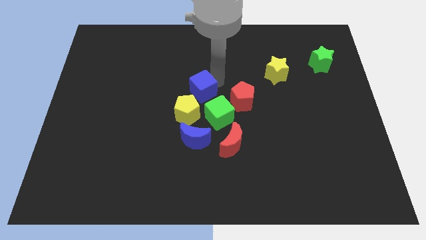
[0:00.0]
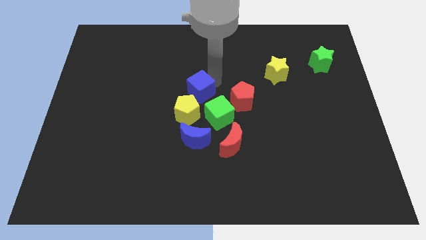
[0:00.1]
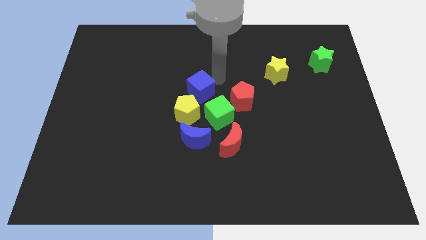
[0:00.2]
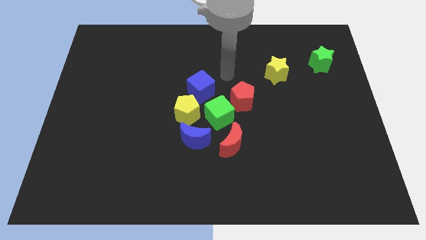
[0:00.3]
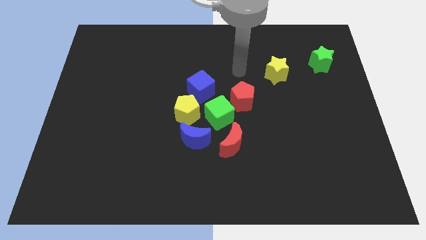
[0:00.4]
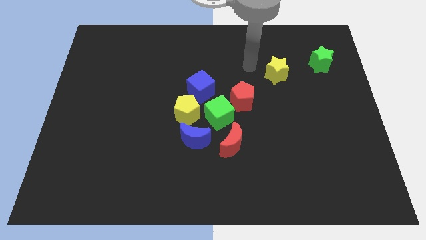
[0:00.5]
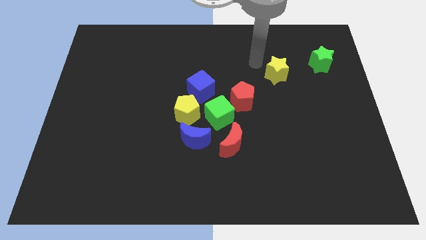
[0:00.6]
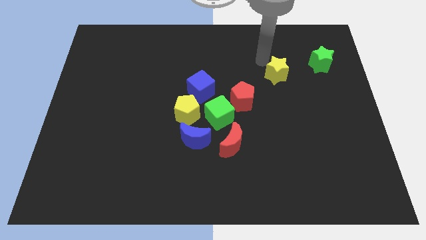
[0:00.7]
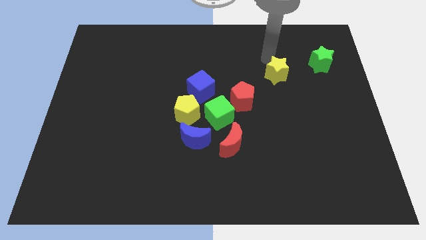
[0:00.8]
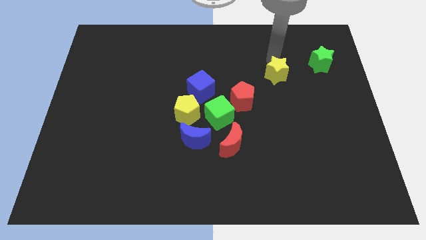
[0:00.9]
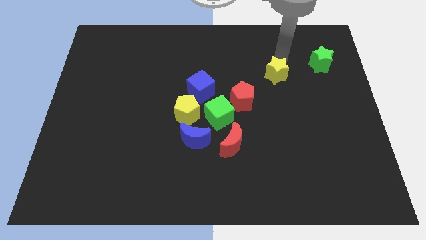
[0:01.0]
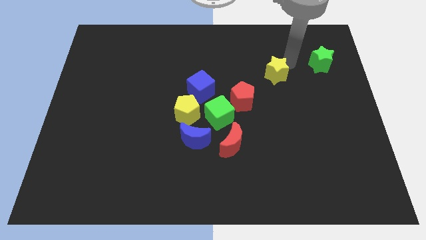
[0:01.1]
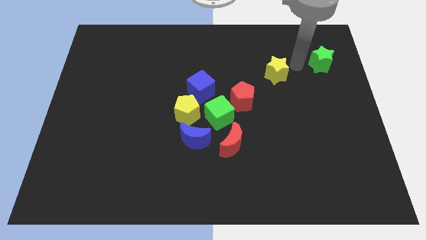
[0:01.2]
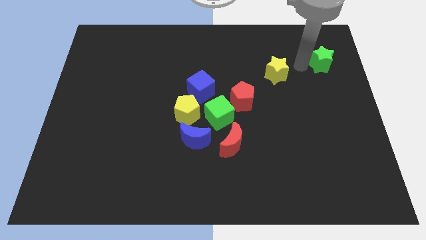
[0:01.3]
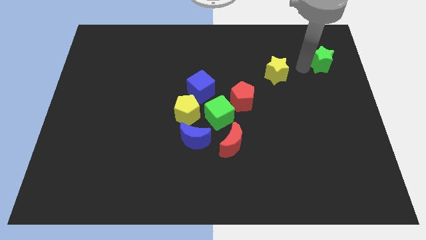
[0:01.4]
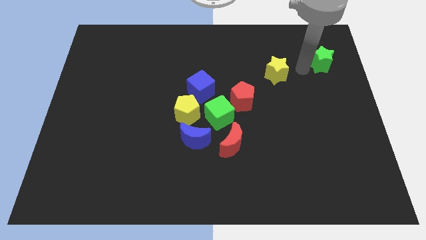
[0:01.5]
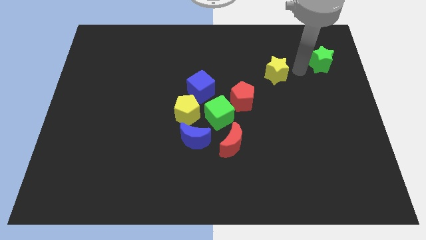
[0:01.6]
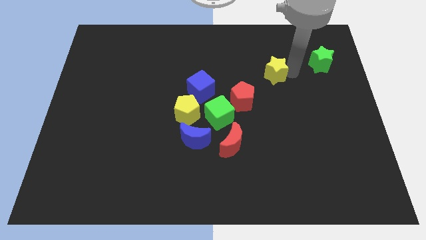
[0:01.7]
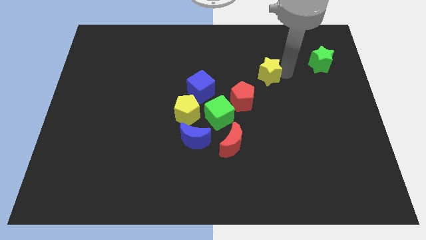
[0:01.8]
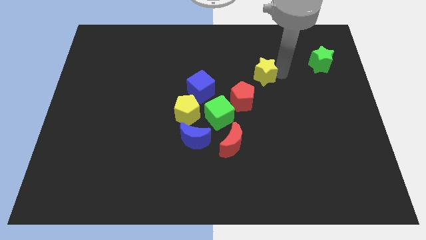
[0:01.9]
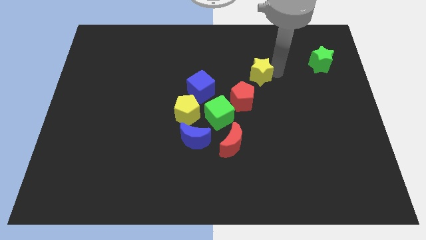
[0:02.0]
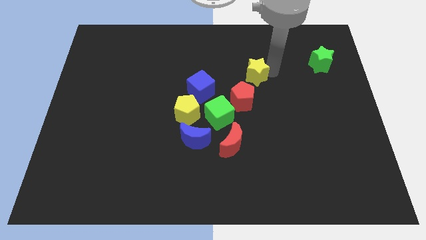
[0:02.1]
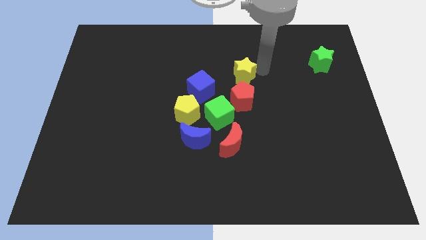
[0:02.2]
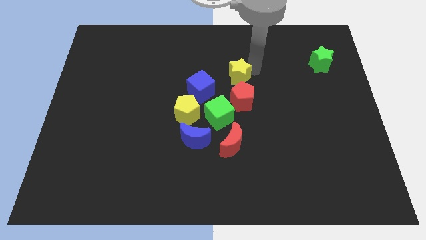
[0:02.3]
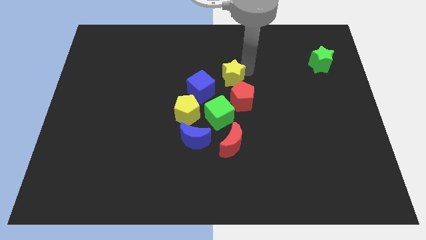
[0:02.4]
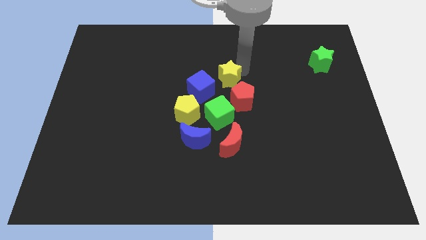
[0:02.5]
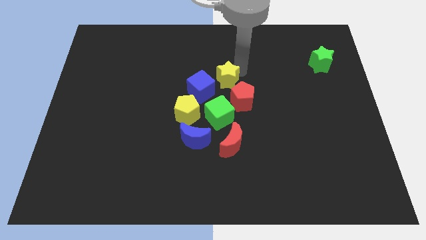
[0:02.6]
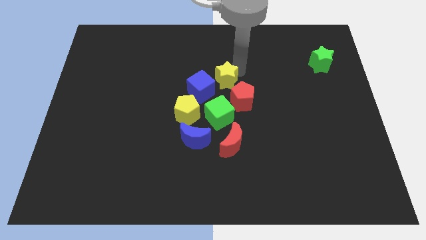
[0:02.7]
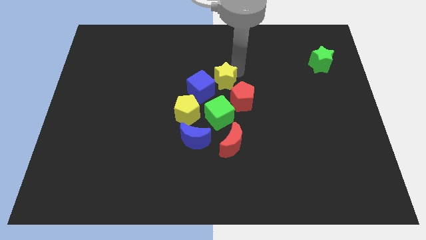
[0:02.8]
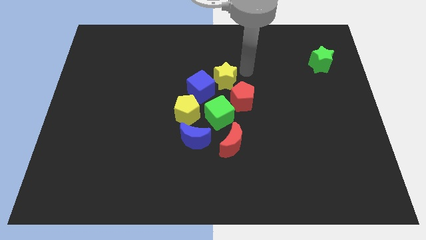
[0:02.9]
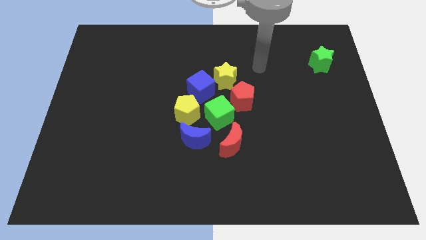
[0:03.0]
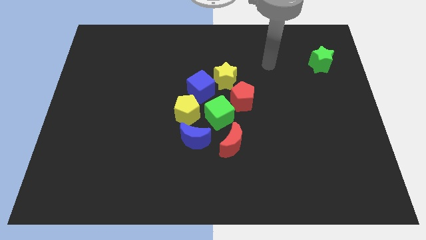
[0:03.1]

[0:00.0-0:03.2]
push the yellow star towards the top of green cube

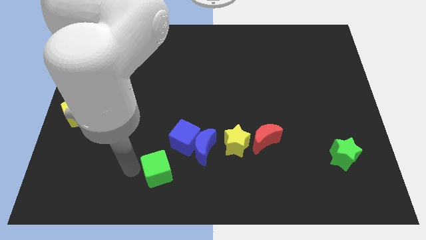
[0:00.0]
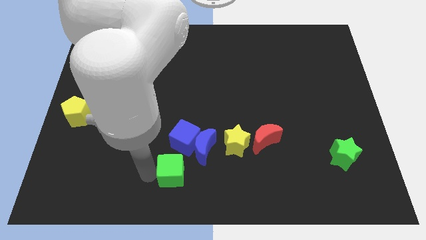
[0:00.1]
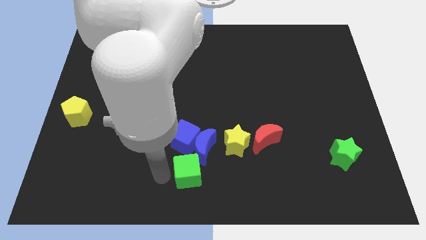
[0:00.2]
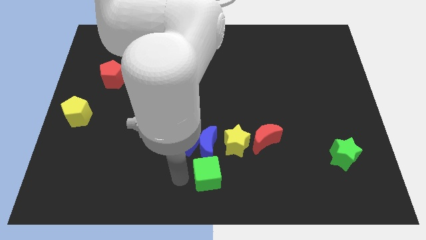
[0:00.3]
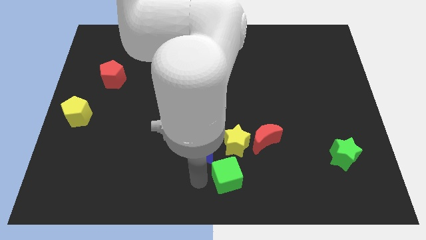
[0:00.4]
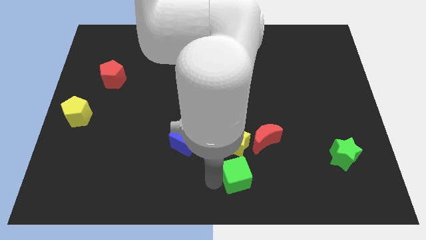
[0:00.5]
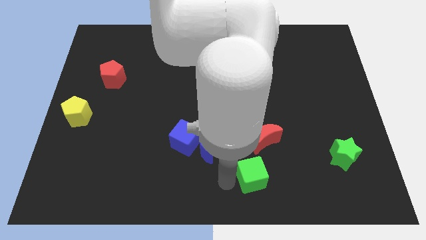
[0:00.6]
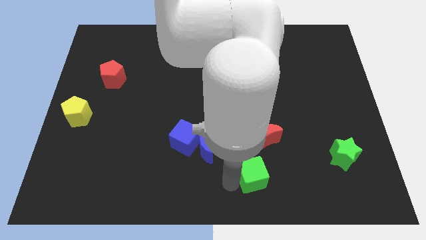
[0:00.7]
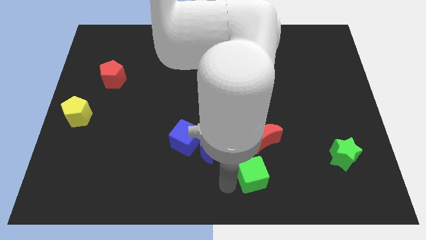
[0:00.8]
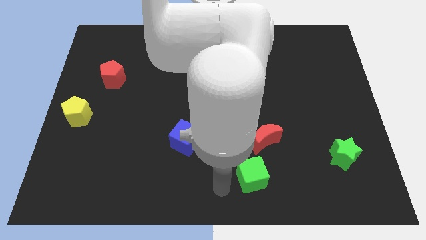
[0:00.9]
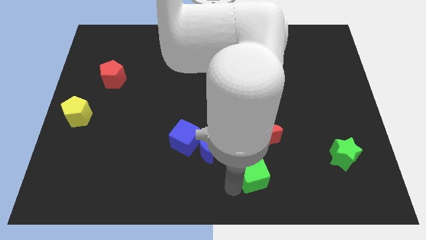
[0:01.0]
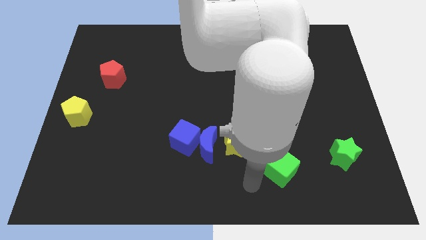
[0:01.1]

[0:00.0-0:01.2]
move the green cube to the bottom of the yellow star

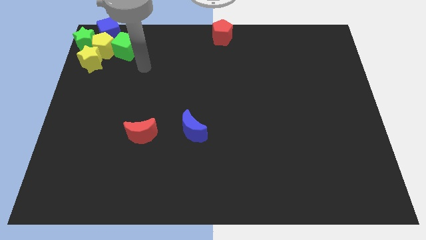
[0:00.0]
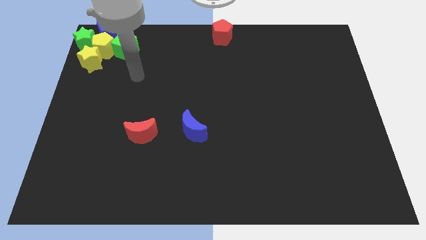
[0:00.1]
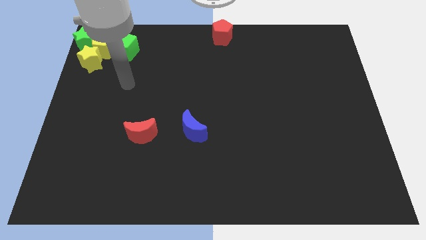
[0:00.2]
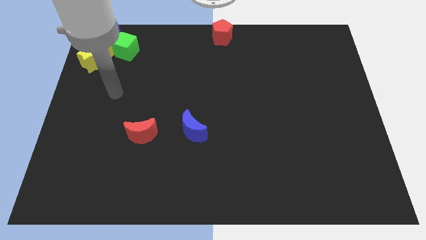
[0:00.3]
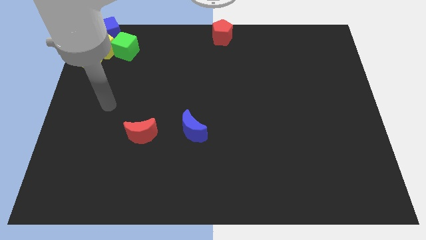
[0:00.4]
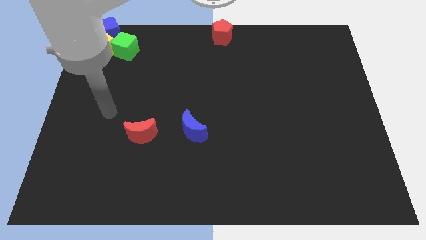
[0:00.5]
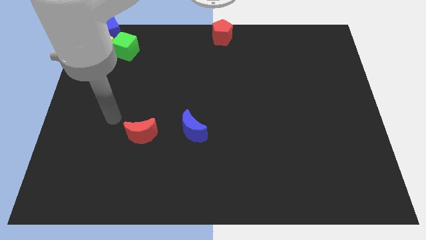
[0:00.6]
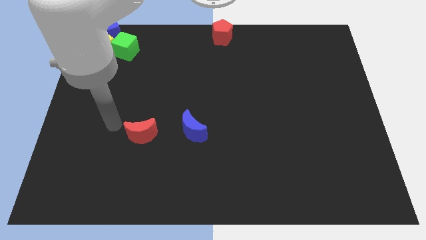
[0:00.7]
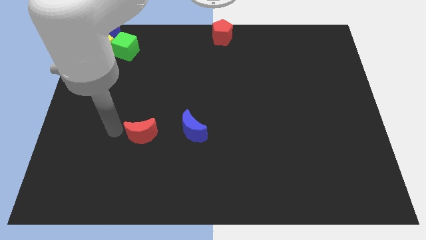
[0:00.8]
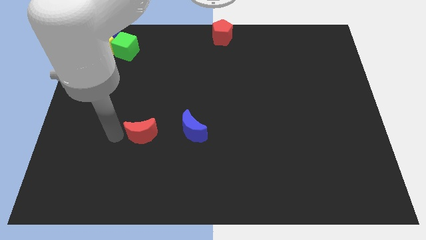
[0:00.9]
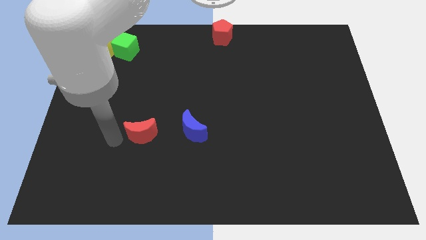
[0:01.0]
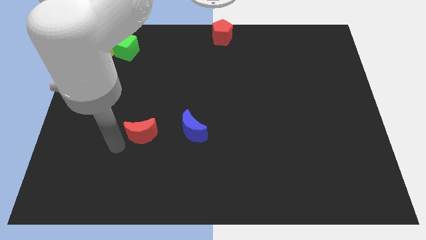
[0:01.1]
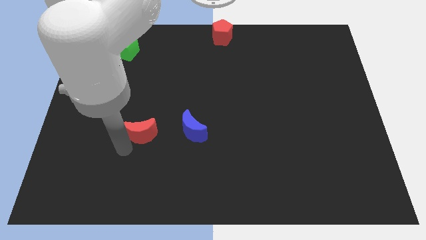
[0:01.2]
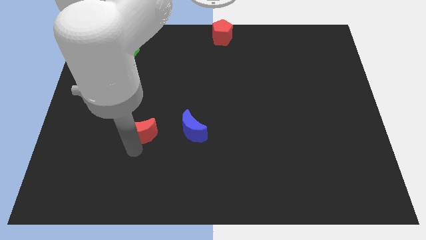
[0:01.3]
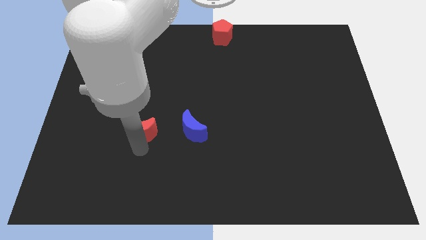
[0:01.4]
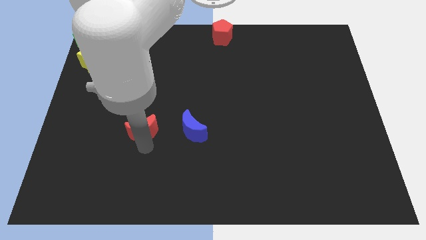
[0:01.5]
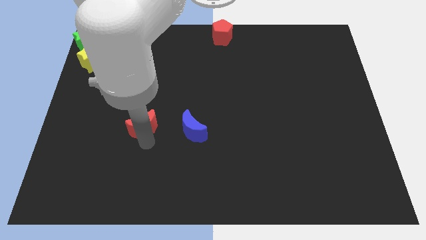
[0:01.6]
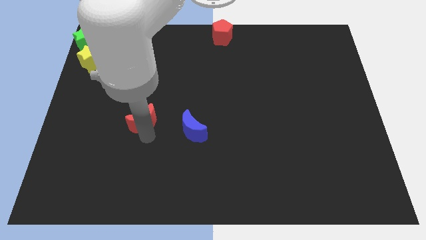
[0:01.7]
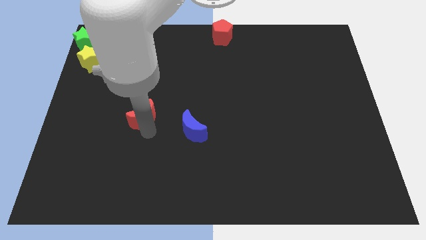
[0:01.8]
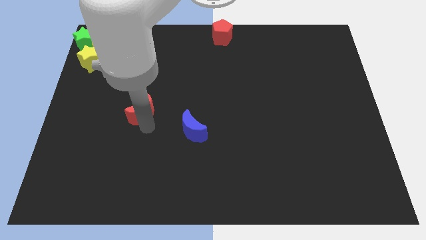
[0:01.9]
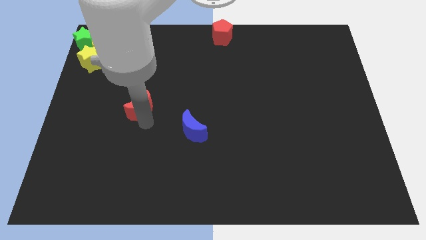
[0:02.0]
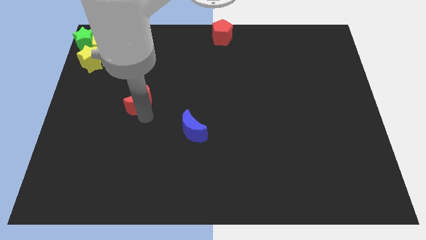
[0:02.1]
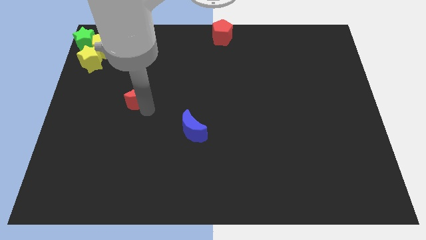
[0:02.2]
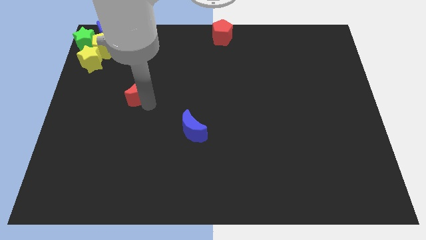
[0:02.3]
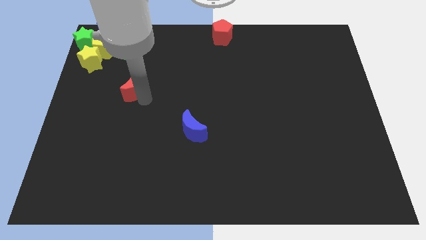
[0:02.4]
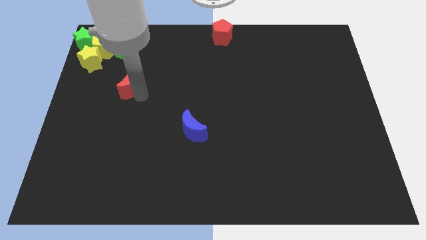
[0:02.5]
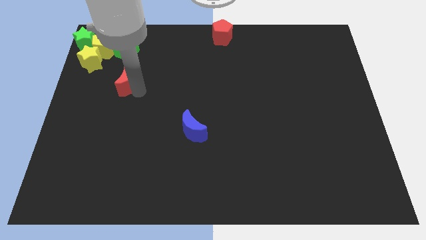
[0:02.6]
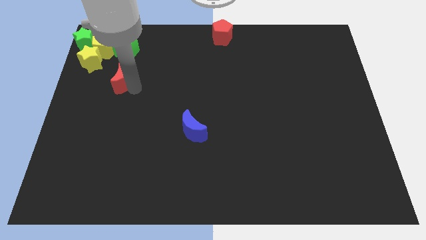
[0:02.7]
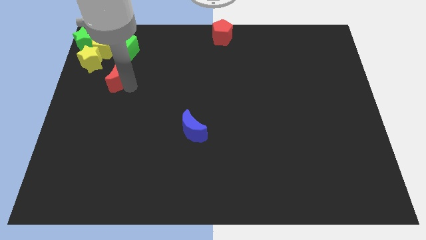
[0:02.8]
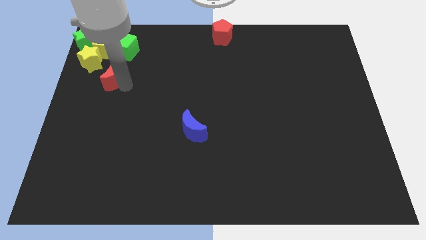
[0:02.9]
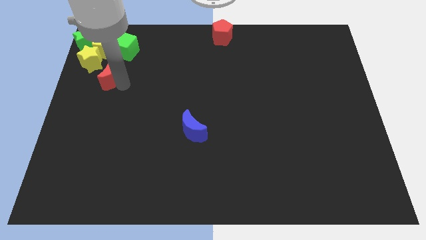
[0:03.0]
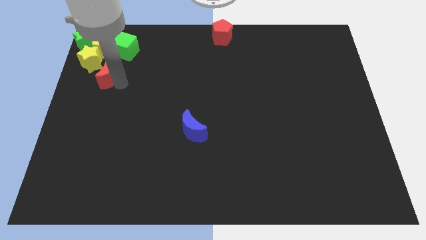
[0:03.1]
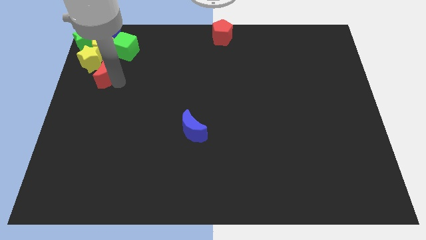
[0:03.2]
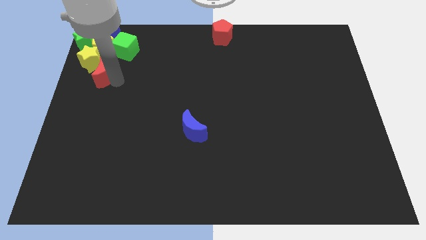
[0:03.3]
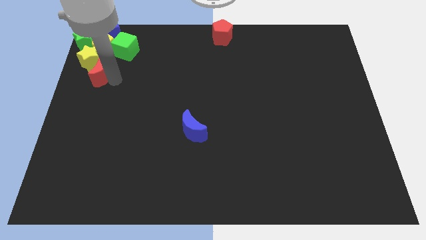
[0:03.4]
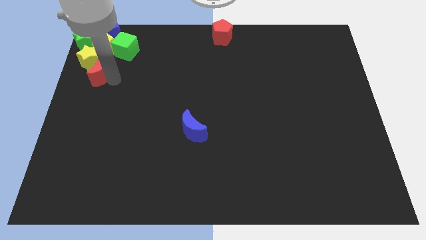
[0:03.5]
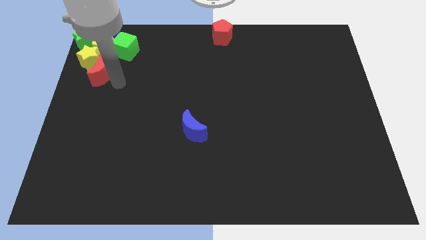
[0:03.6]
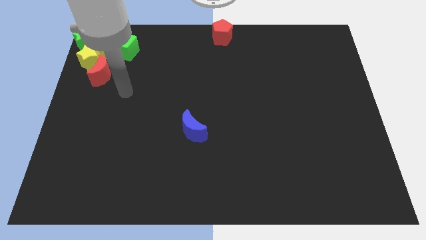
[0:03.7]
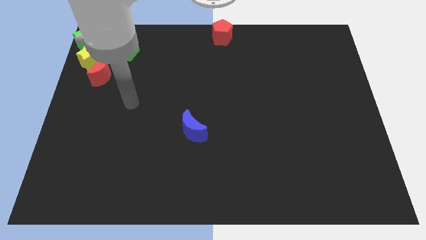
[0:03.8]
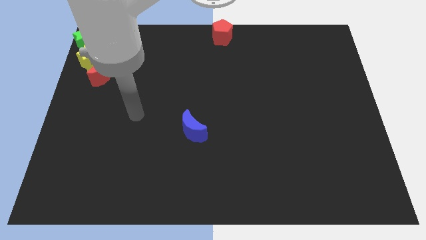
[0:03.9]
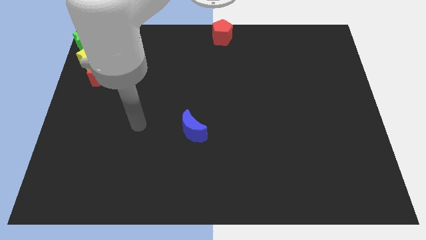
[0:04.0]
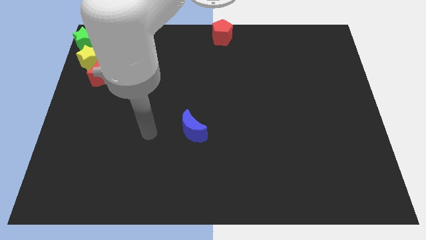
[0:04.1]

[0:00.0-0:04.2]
place red moon to the bottom right of the yellow star

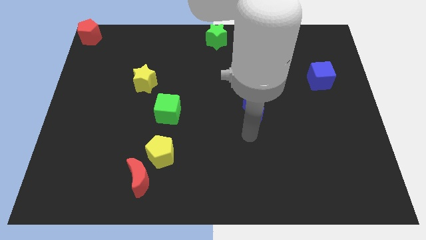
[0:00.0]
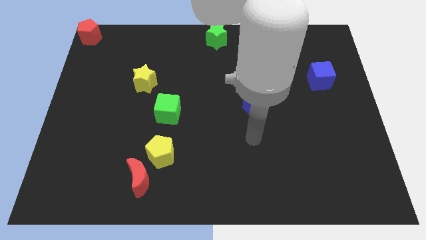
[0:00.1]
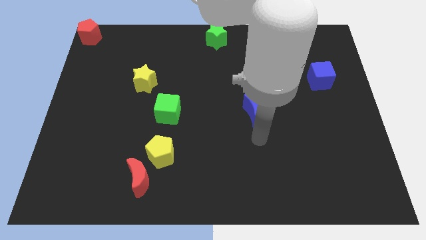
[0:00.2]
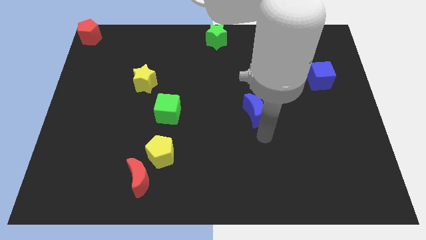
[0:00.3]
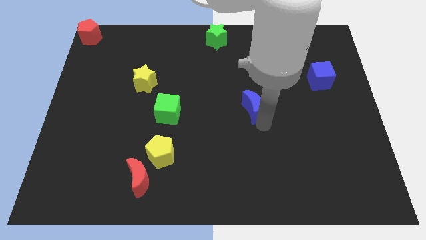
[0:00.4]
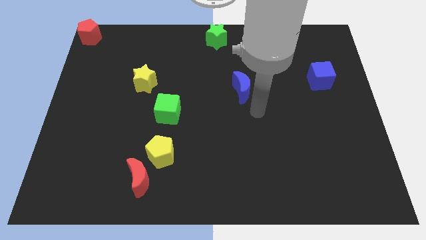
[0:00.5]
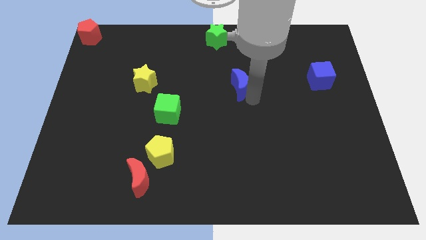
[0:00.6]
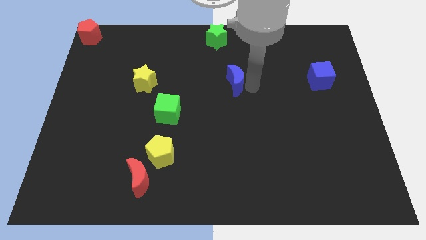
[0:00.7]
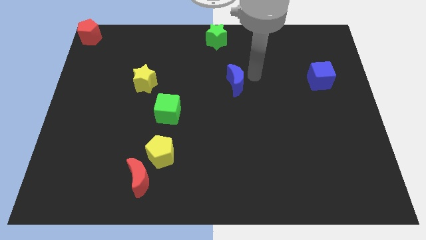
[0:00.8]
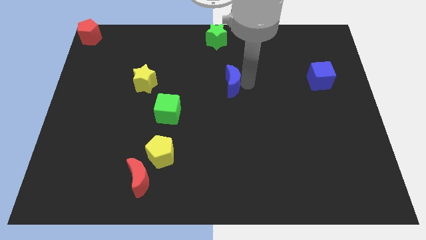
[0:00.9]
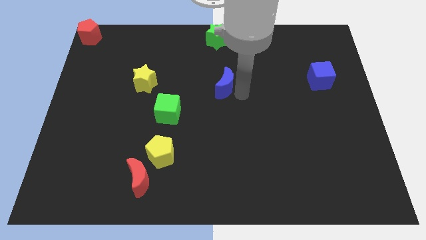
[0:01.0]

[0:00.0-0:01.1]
place blue moon to the right of yellow star
